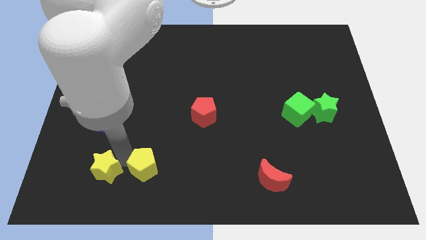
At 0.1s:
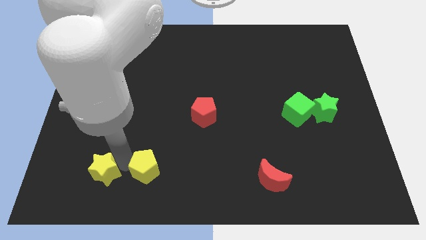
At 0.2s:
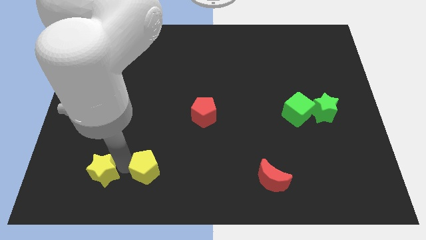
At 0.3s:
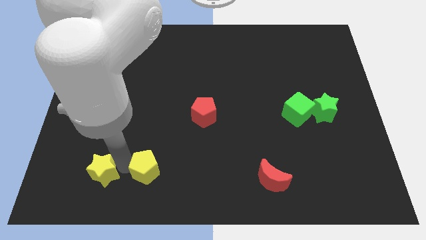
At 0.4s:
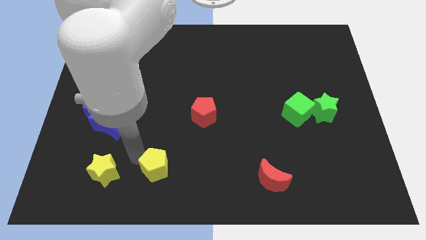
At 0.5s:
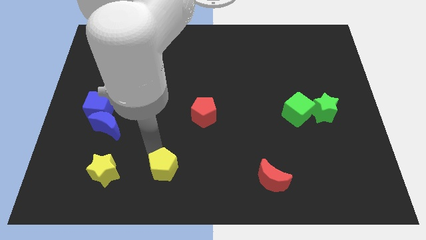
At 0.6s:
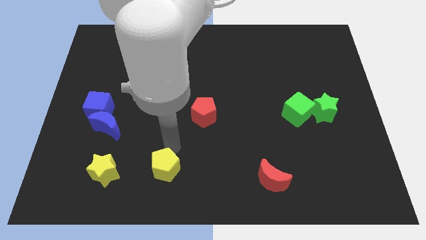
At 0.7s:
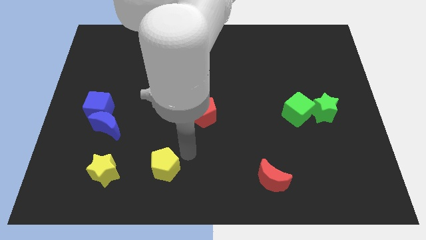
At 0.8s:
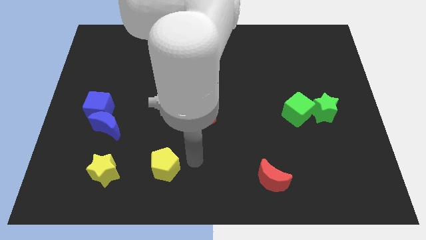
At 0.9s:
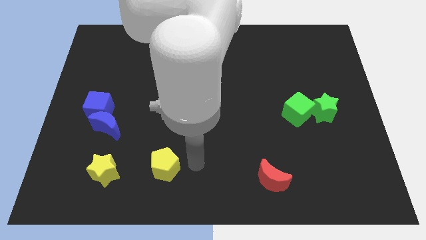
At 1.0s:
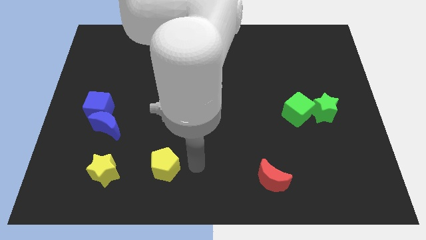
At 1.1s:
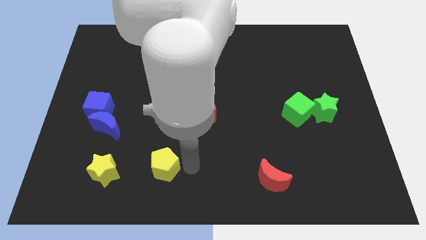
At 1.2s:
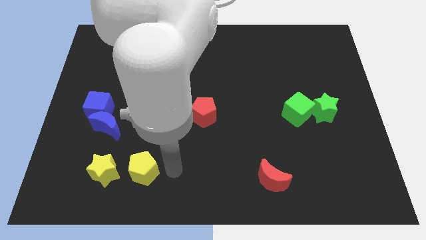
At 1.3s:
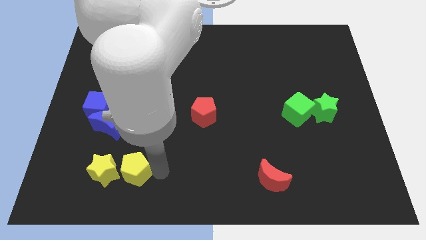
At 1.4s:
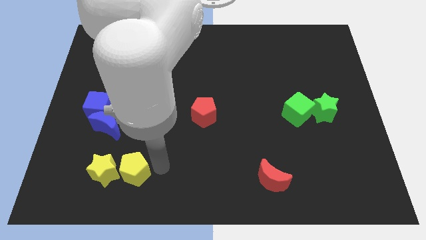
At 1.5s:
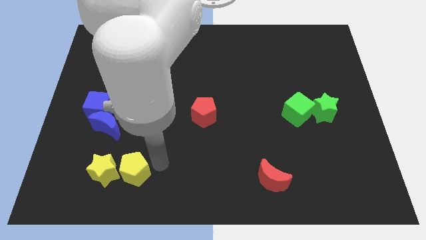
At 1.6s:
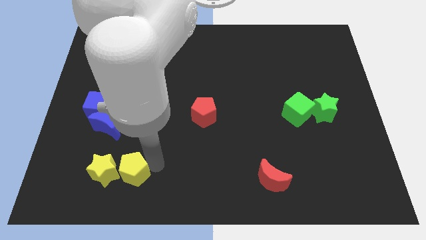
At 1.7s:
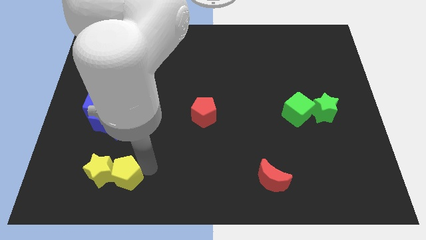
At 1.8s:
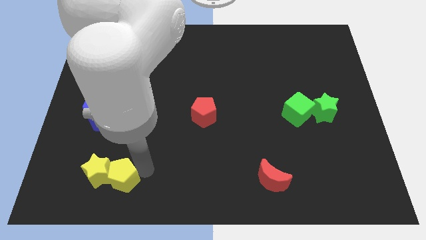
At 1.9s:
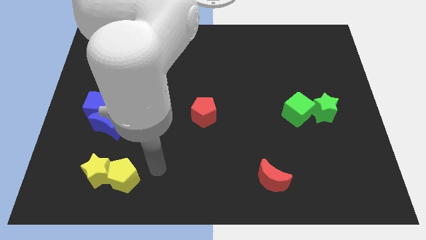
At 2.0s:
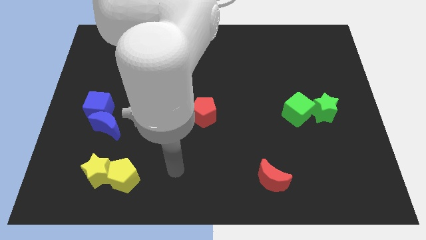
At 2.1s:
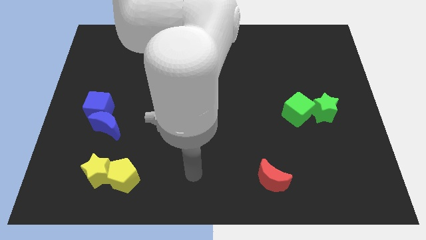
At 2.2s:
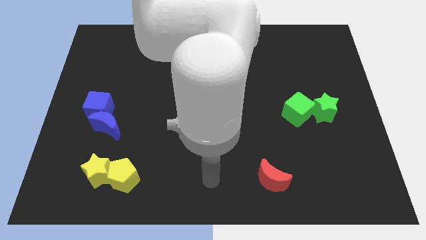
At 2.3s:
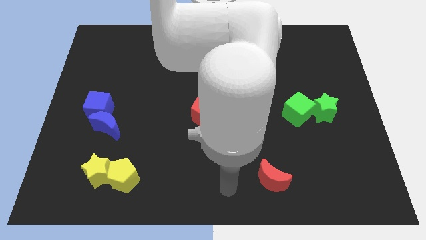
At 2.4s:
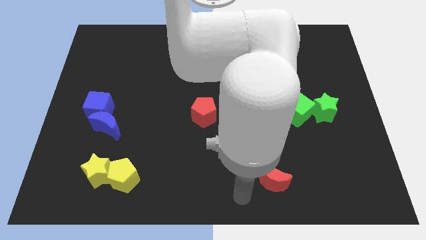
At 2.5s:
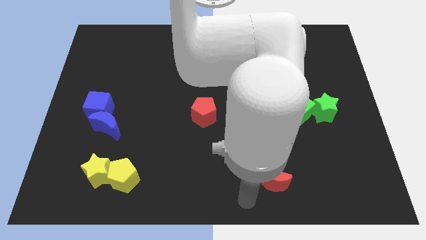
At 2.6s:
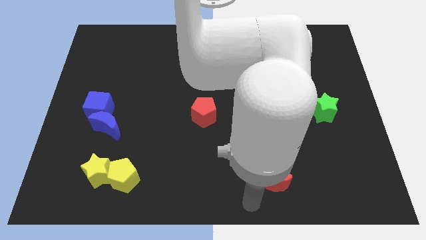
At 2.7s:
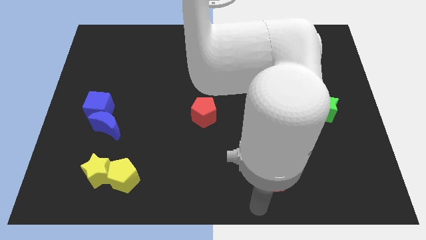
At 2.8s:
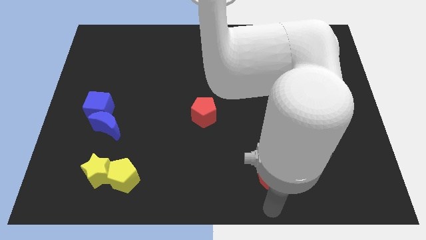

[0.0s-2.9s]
move yellow pentagon into the yellow star

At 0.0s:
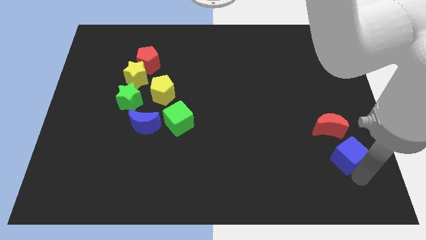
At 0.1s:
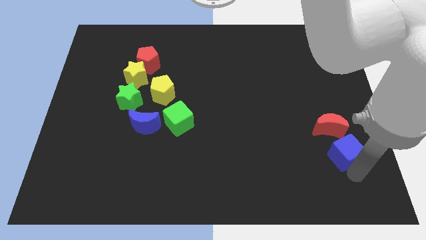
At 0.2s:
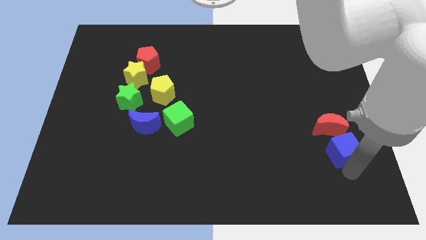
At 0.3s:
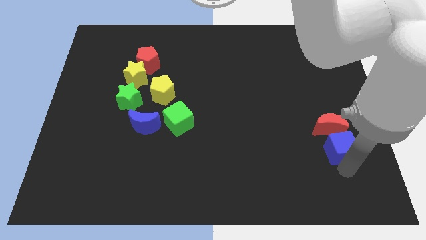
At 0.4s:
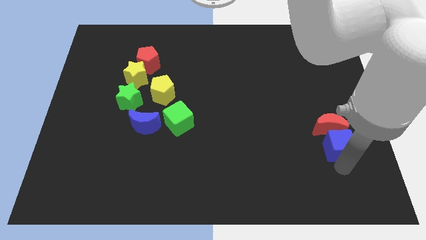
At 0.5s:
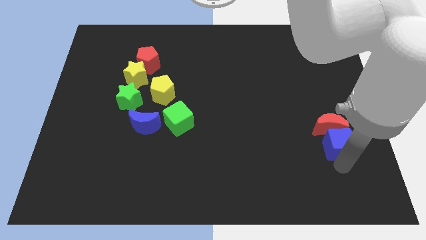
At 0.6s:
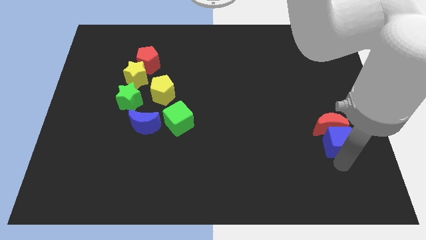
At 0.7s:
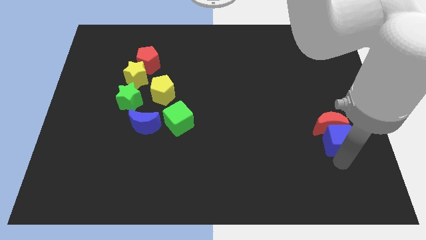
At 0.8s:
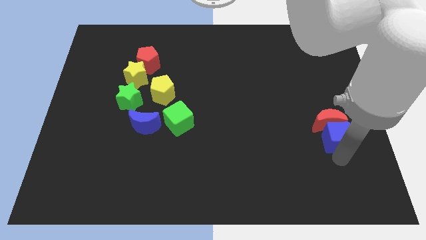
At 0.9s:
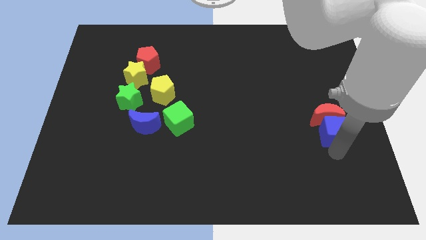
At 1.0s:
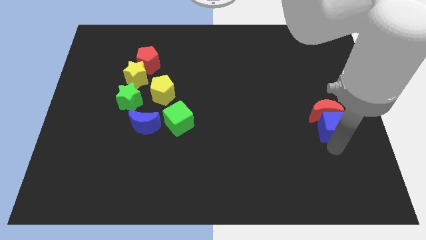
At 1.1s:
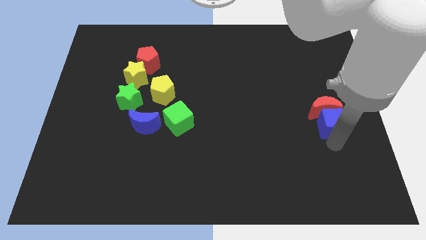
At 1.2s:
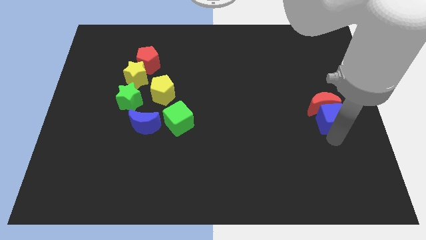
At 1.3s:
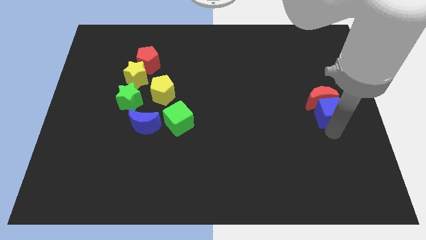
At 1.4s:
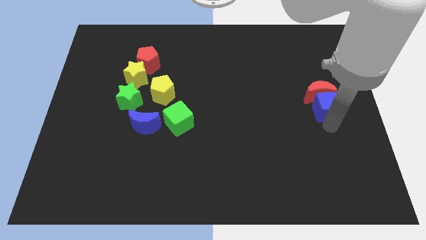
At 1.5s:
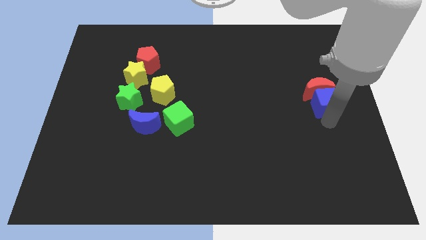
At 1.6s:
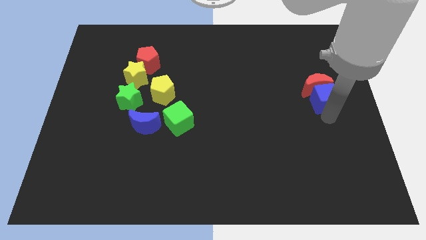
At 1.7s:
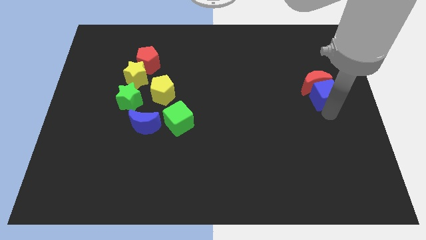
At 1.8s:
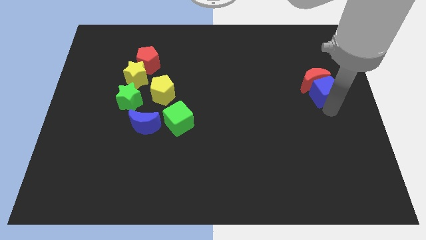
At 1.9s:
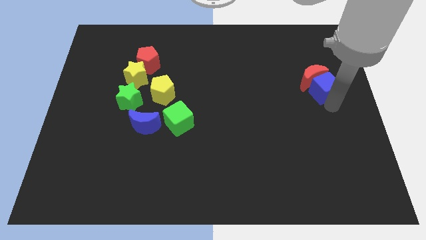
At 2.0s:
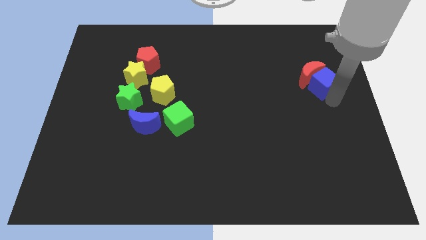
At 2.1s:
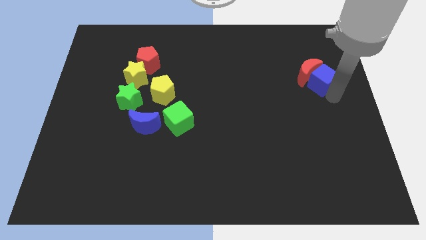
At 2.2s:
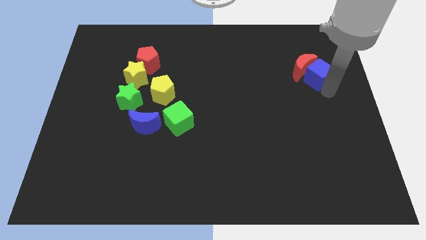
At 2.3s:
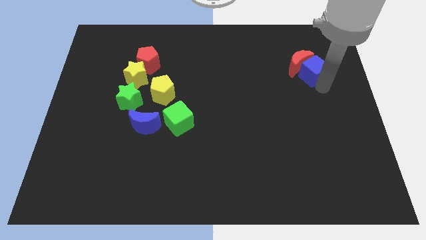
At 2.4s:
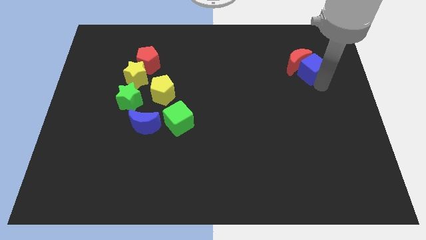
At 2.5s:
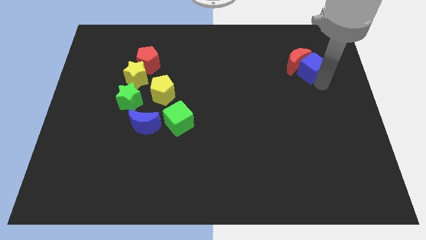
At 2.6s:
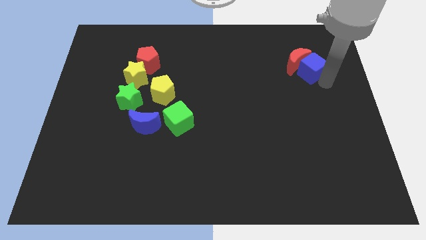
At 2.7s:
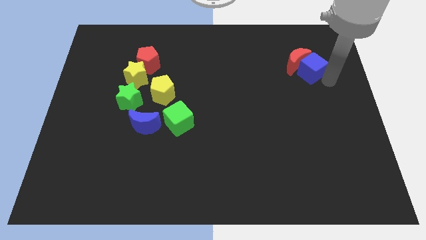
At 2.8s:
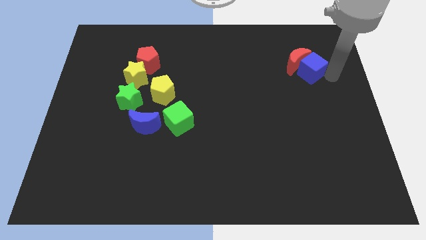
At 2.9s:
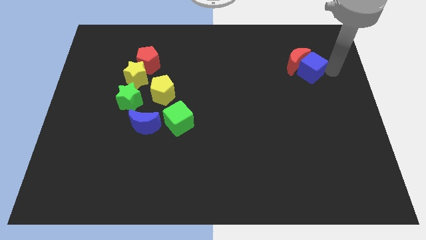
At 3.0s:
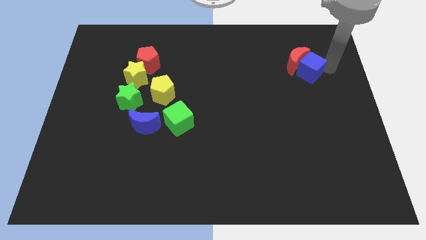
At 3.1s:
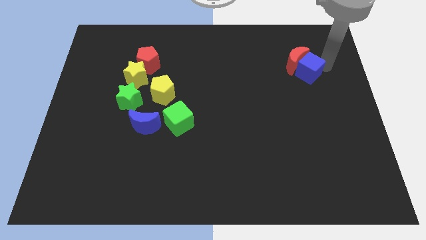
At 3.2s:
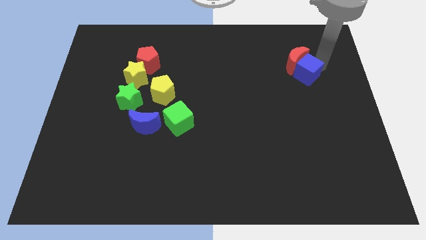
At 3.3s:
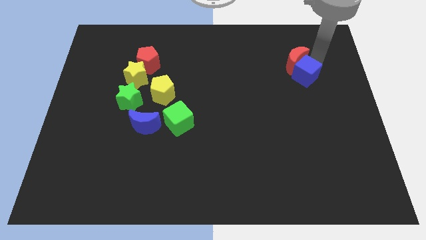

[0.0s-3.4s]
move the blue cube into the red crescent towards the top right of the board

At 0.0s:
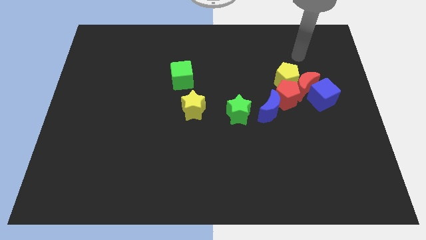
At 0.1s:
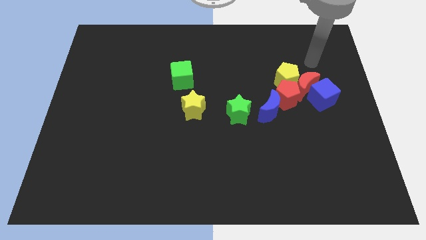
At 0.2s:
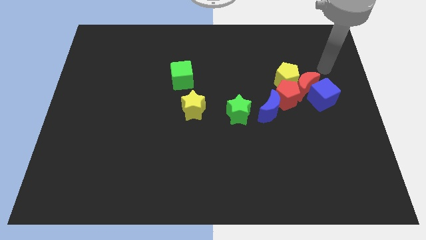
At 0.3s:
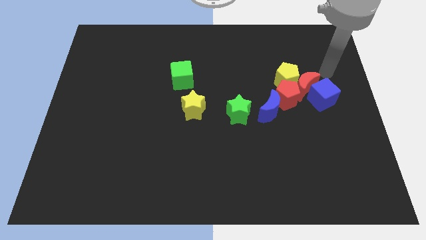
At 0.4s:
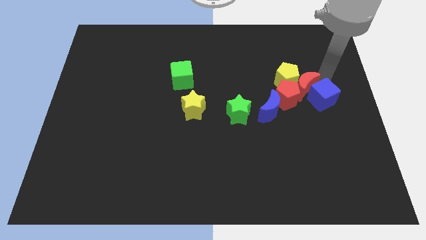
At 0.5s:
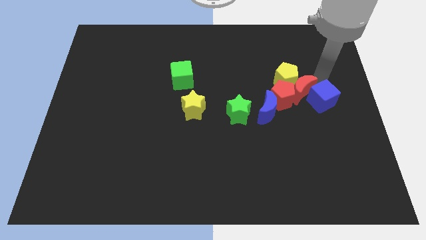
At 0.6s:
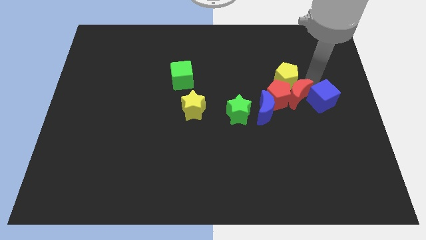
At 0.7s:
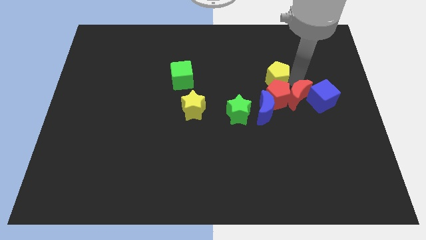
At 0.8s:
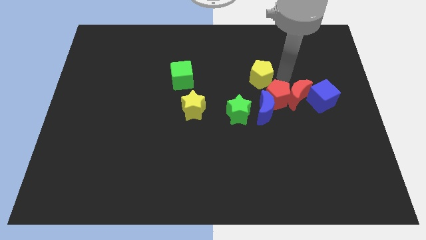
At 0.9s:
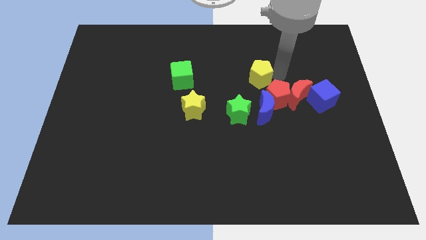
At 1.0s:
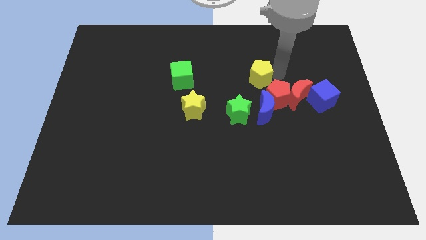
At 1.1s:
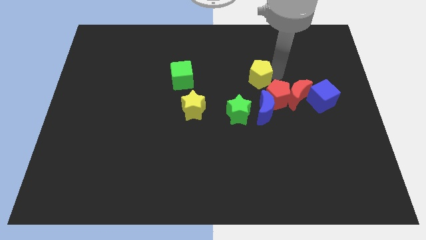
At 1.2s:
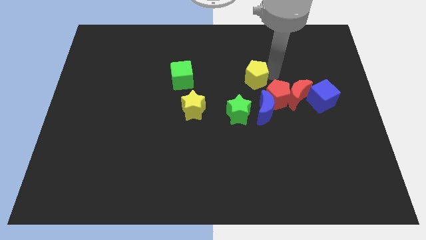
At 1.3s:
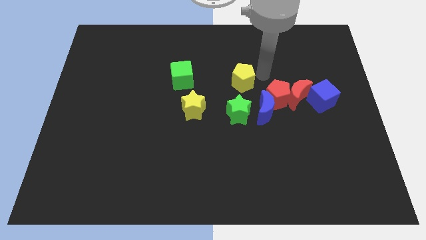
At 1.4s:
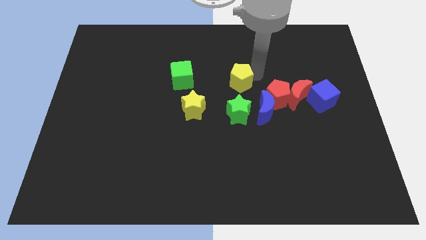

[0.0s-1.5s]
separate the yellow pentagon from the red pentagon

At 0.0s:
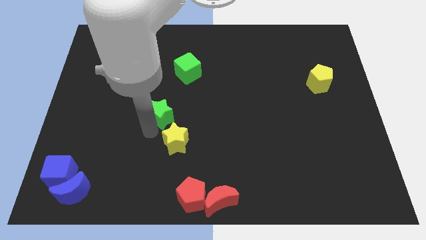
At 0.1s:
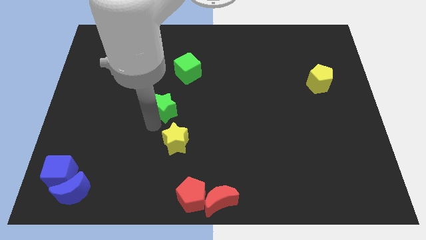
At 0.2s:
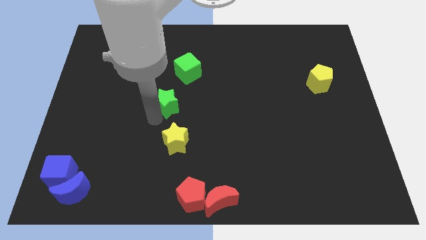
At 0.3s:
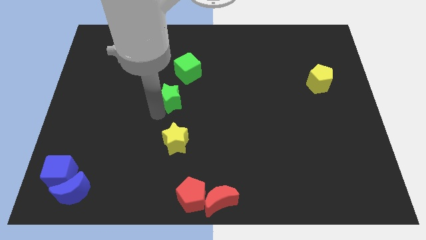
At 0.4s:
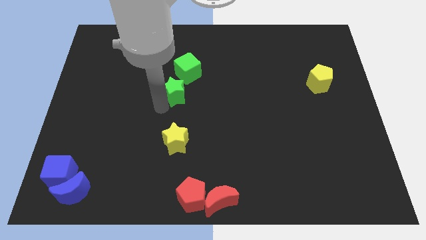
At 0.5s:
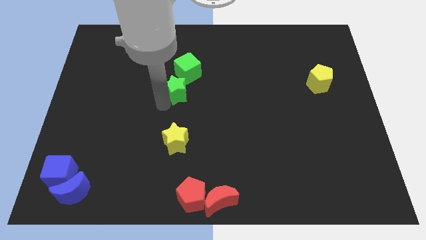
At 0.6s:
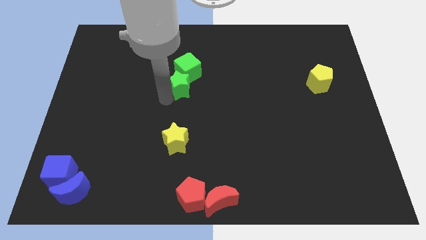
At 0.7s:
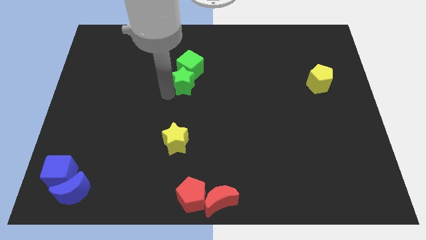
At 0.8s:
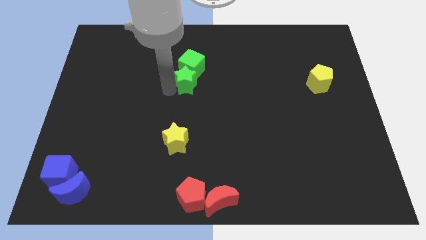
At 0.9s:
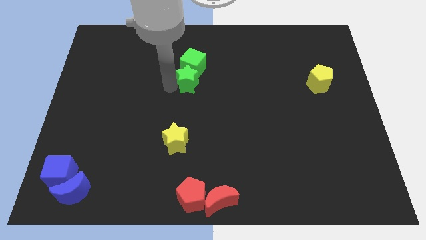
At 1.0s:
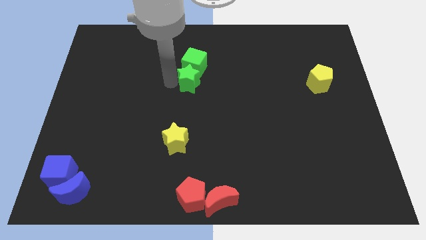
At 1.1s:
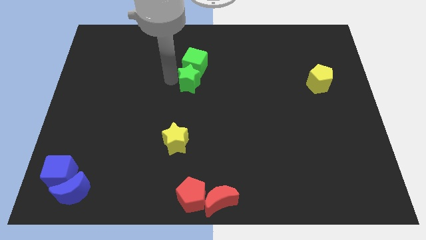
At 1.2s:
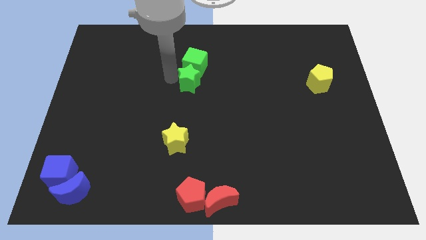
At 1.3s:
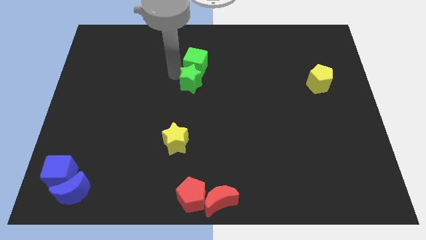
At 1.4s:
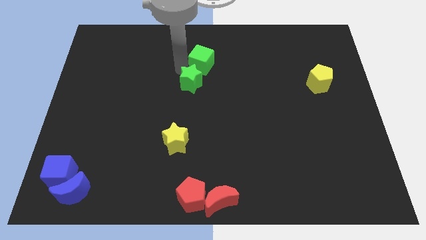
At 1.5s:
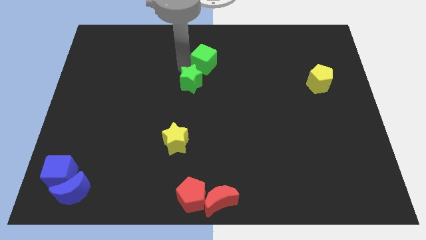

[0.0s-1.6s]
push the green star to the bottom of the green cube
